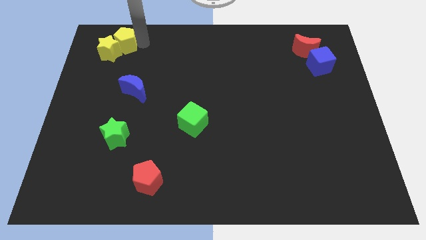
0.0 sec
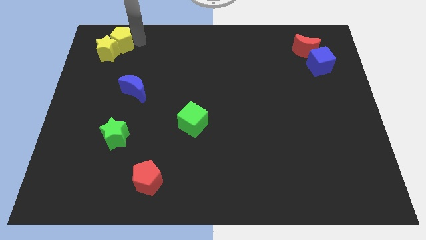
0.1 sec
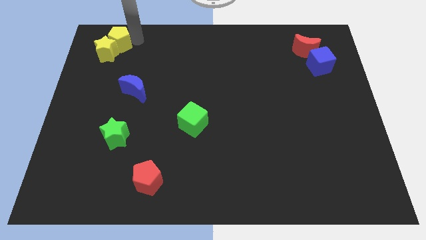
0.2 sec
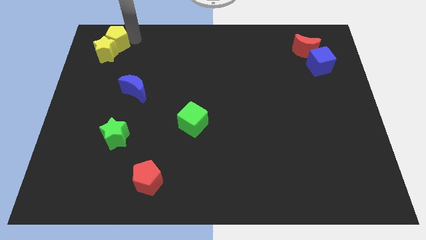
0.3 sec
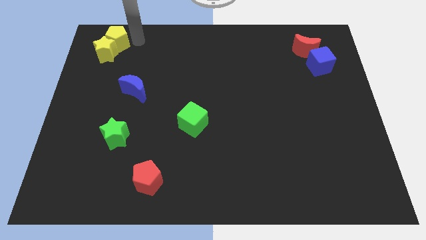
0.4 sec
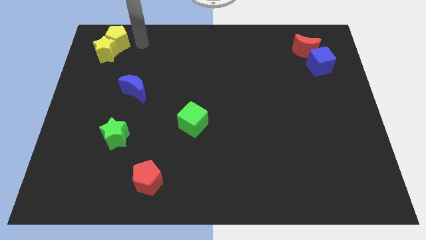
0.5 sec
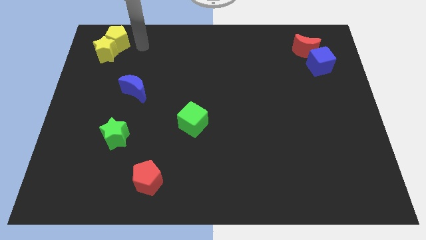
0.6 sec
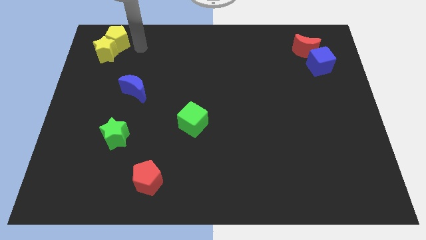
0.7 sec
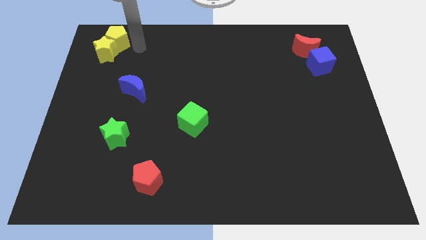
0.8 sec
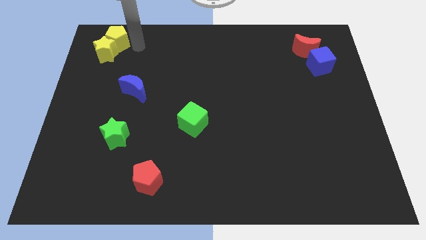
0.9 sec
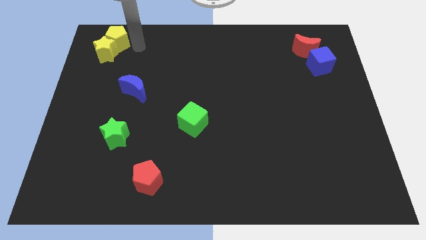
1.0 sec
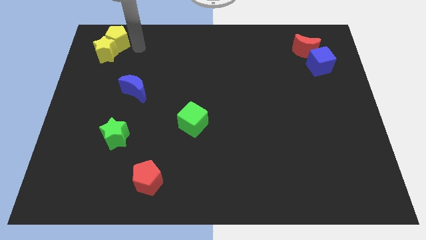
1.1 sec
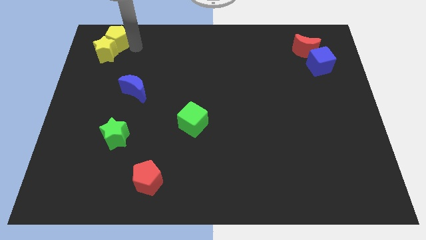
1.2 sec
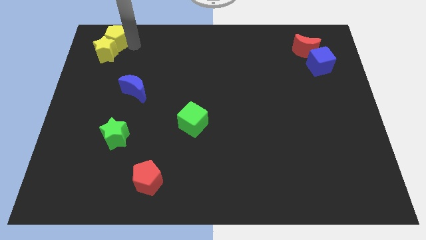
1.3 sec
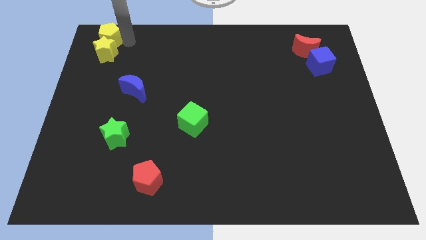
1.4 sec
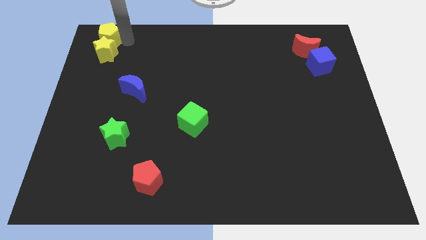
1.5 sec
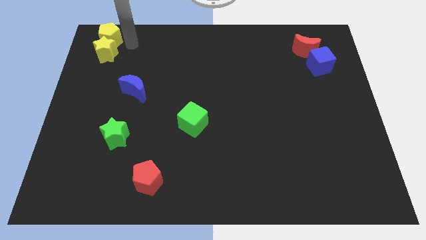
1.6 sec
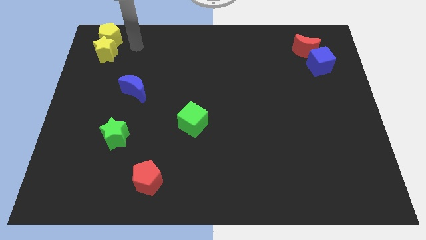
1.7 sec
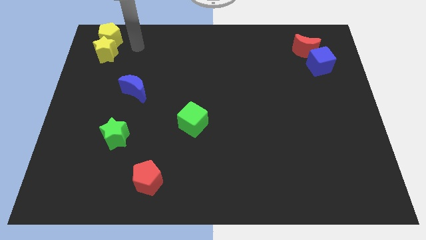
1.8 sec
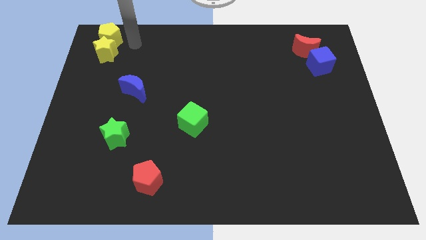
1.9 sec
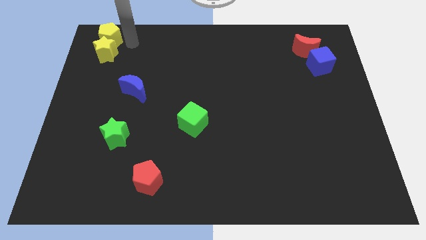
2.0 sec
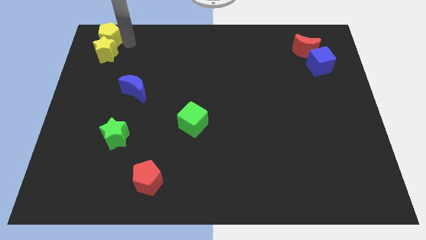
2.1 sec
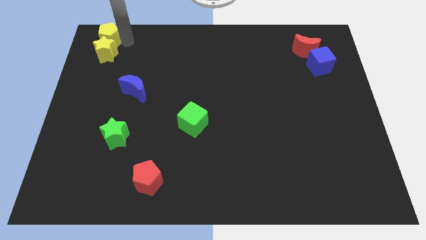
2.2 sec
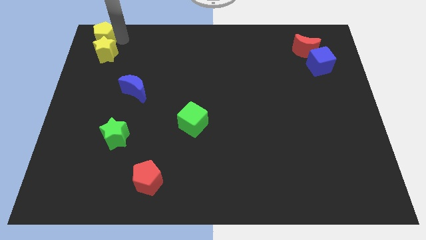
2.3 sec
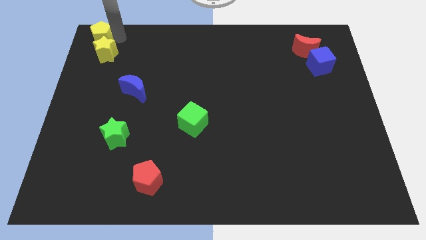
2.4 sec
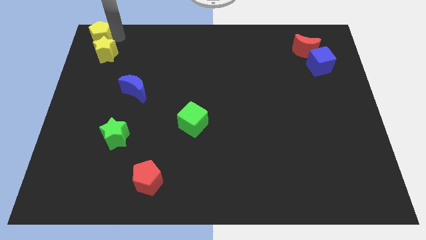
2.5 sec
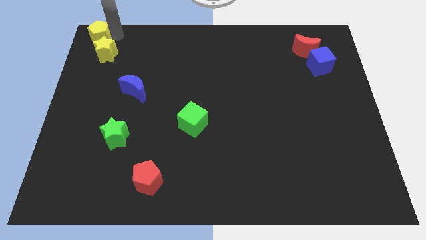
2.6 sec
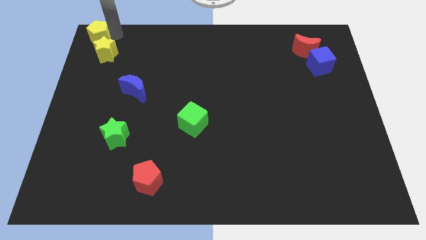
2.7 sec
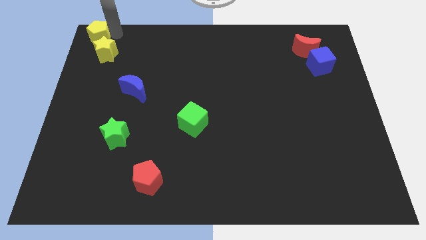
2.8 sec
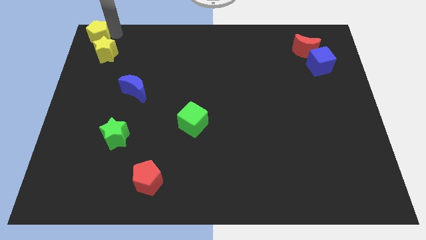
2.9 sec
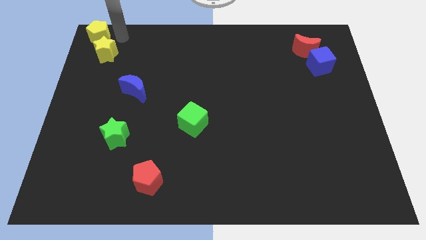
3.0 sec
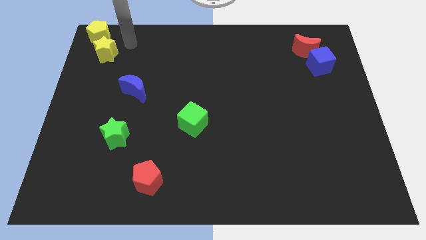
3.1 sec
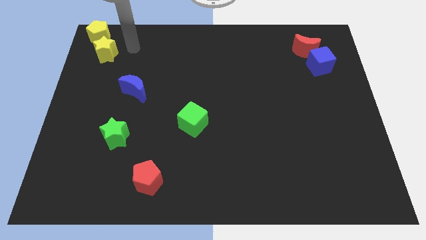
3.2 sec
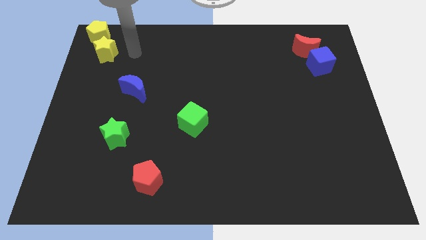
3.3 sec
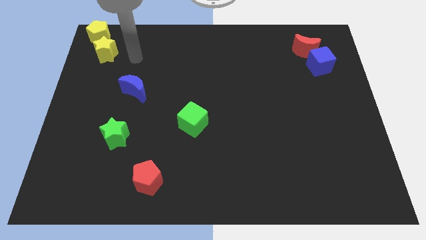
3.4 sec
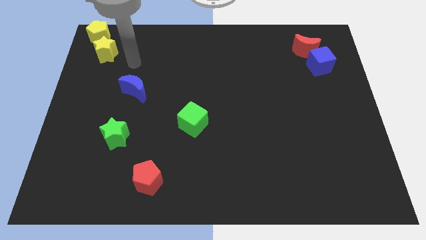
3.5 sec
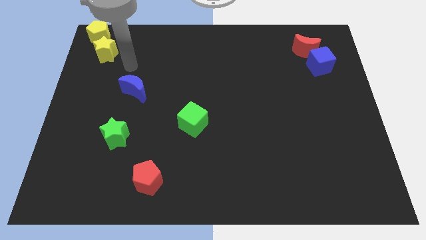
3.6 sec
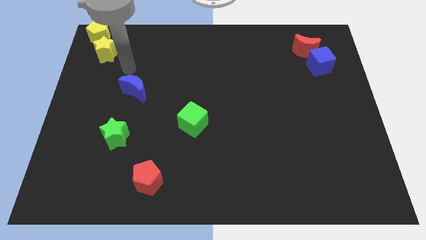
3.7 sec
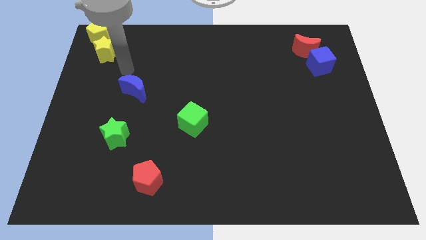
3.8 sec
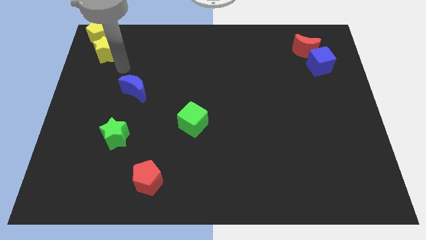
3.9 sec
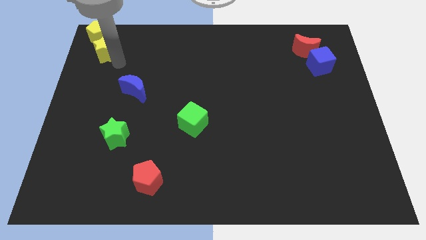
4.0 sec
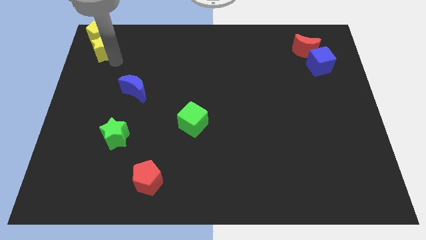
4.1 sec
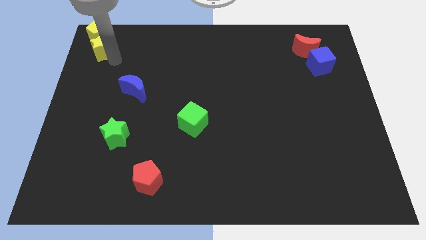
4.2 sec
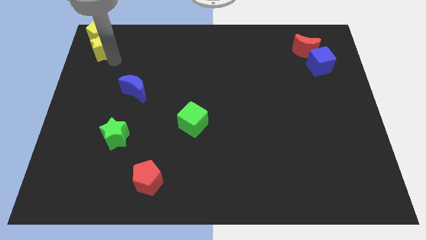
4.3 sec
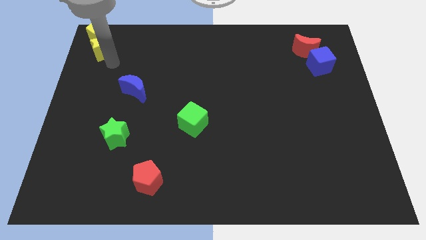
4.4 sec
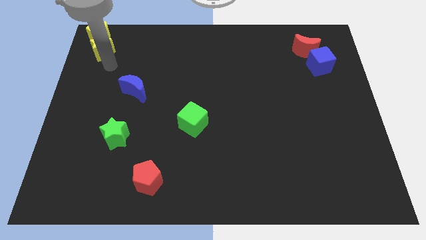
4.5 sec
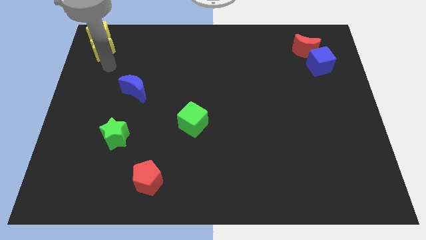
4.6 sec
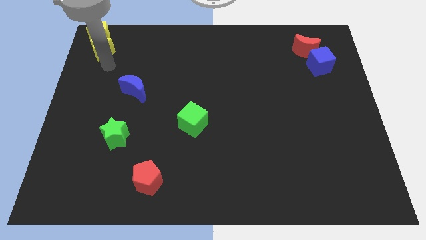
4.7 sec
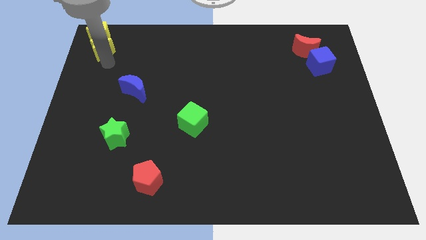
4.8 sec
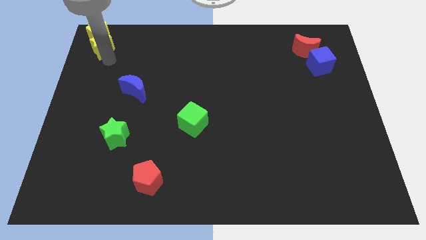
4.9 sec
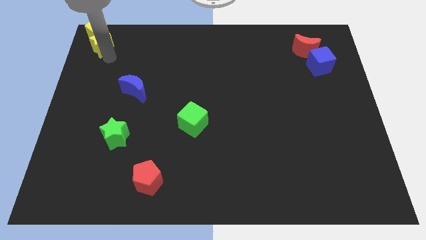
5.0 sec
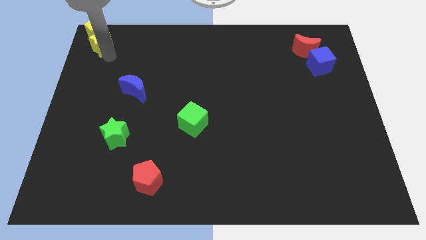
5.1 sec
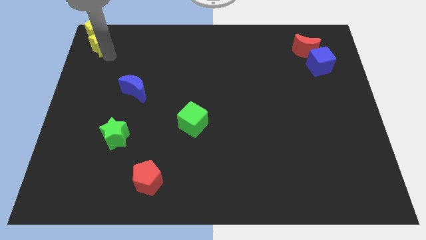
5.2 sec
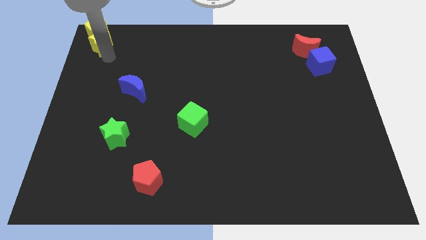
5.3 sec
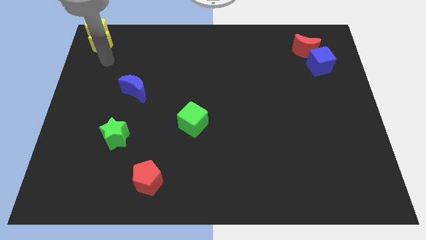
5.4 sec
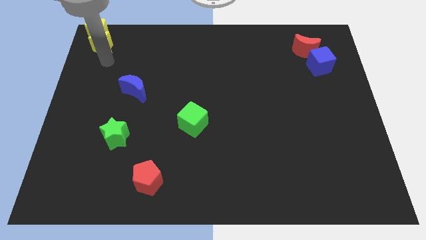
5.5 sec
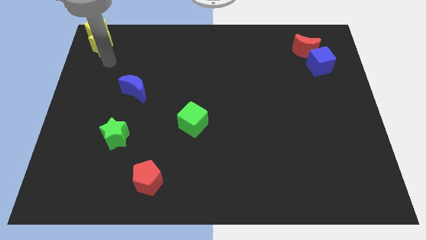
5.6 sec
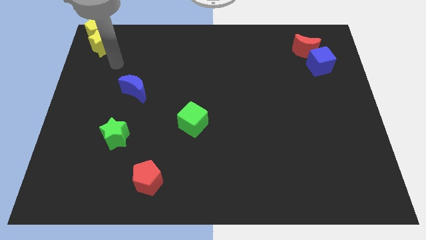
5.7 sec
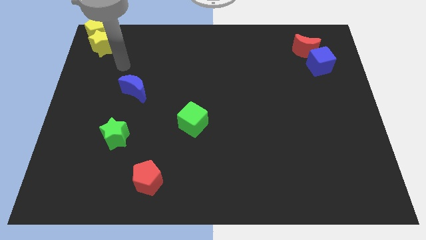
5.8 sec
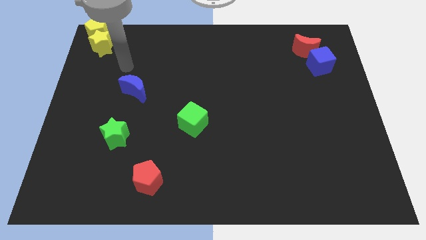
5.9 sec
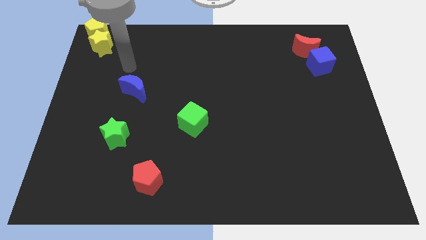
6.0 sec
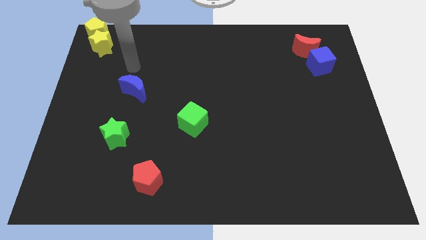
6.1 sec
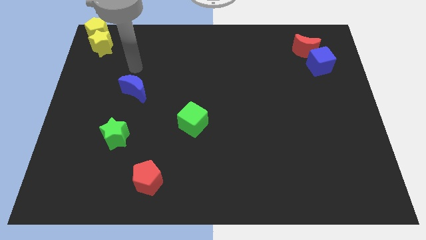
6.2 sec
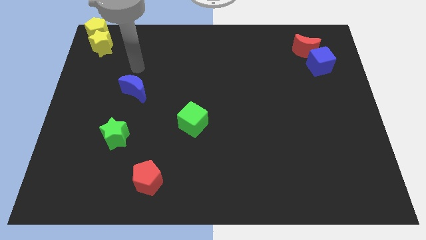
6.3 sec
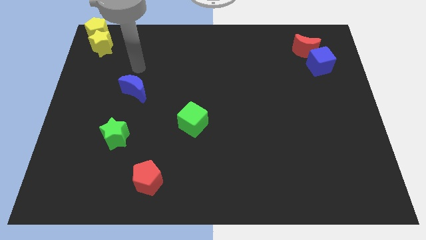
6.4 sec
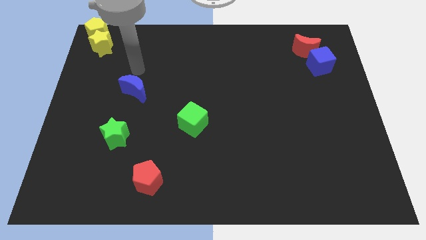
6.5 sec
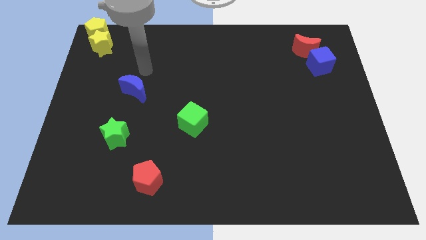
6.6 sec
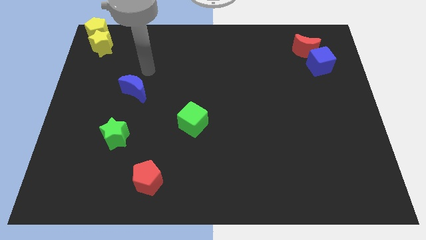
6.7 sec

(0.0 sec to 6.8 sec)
move yellow blocks to the top left of the board

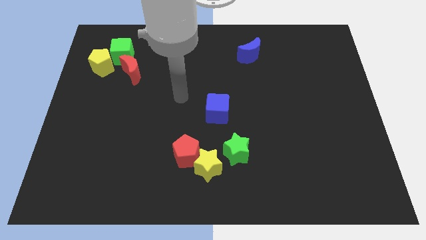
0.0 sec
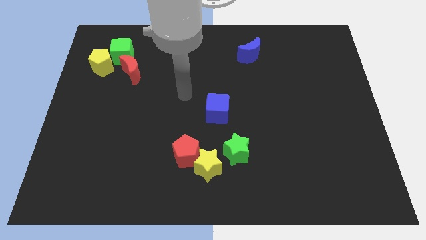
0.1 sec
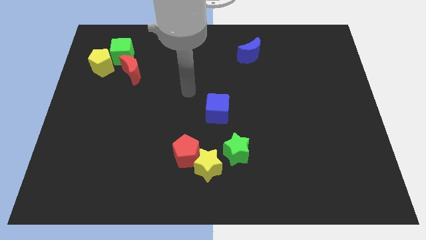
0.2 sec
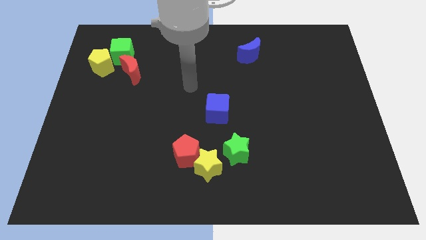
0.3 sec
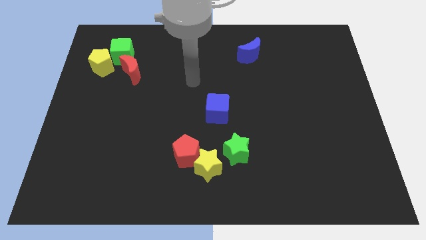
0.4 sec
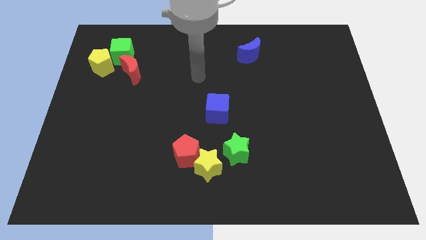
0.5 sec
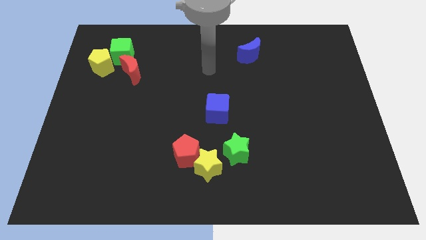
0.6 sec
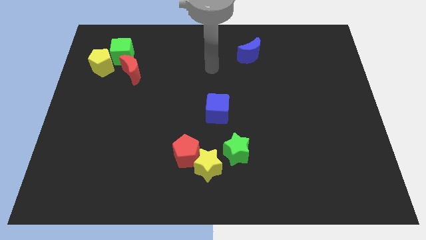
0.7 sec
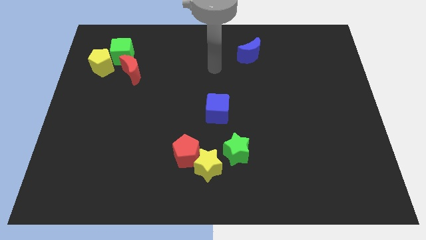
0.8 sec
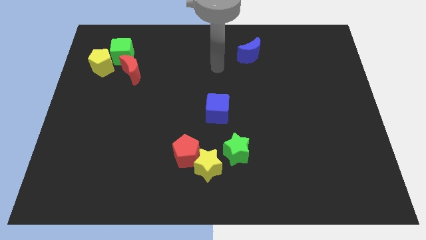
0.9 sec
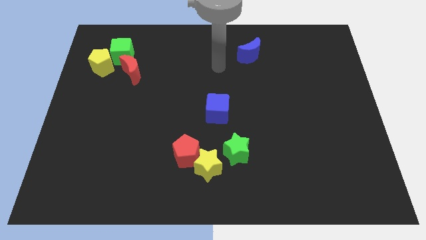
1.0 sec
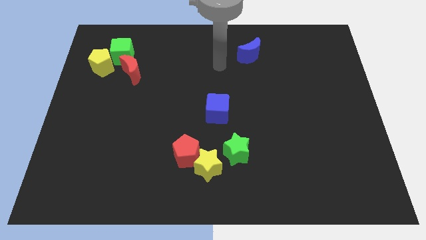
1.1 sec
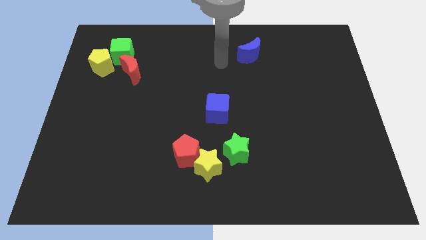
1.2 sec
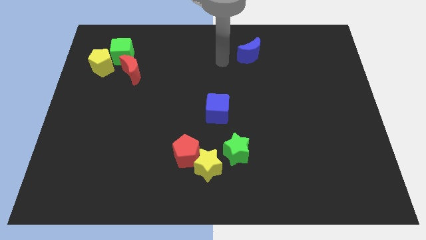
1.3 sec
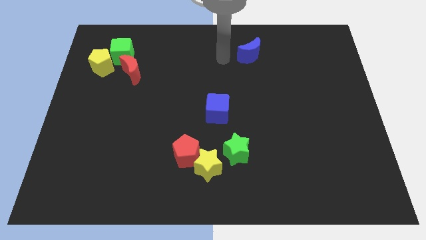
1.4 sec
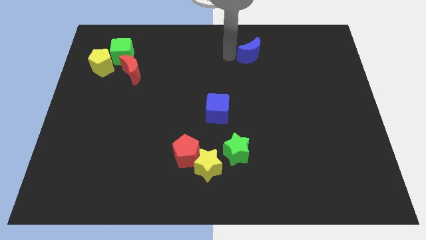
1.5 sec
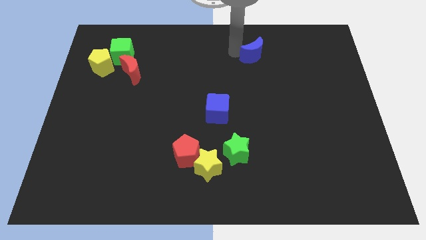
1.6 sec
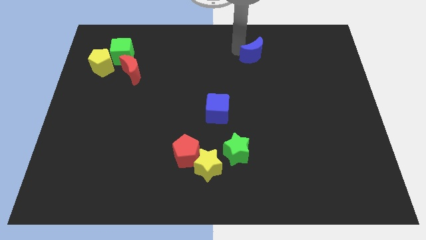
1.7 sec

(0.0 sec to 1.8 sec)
tap the blue crescent

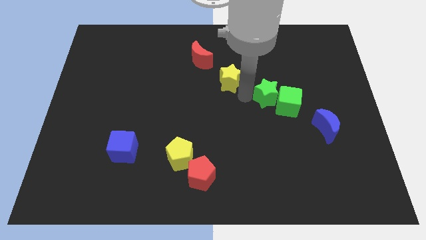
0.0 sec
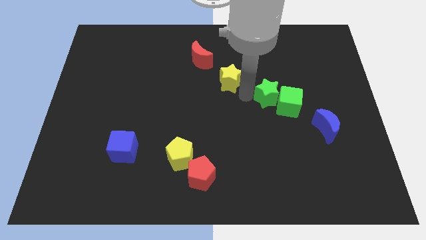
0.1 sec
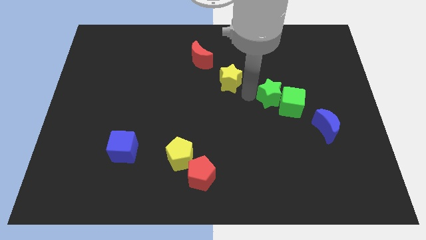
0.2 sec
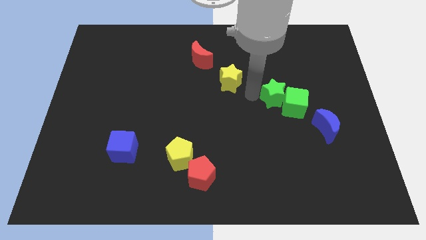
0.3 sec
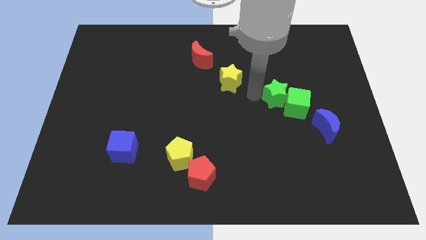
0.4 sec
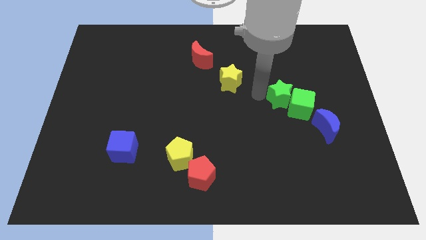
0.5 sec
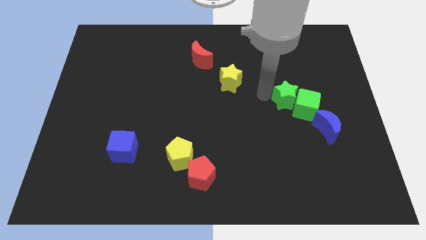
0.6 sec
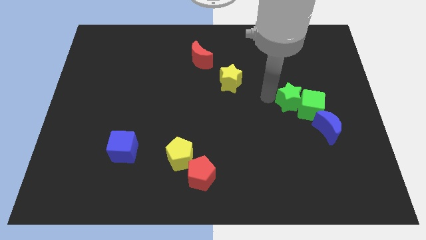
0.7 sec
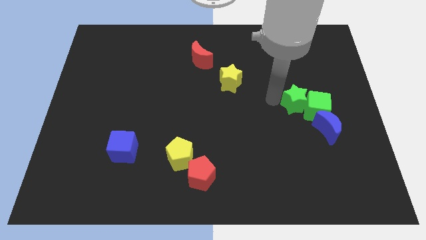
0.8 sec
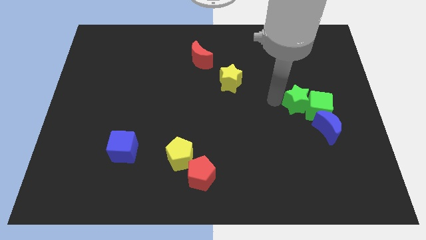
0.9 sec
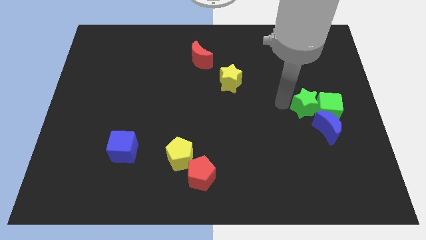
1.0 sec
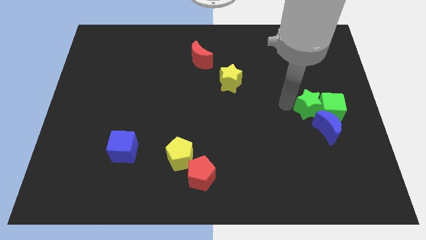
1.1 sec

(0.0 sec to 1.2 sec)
push the green cube and green star on the top of the blue crescent
